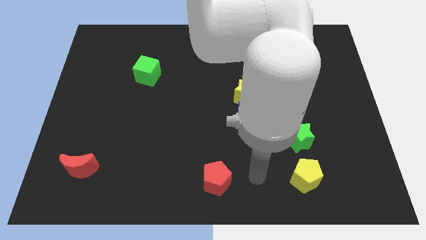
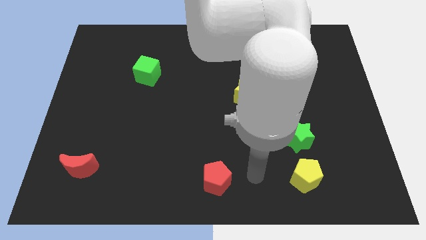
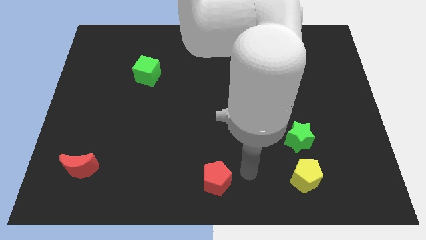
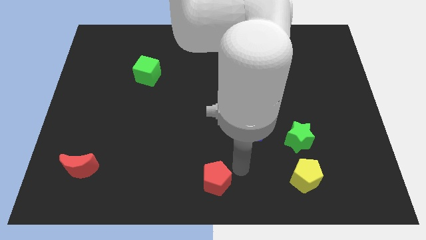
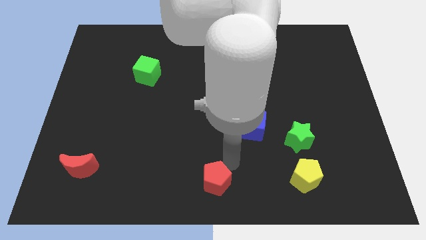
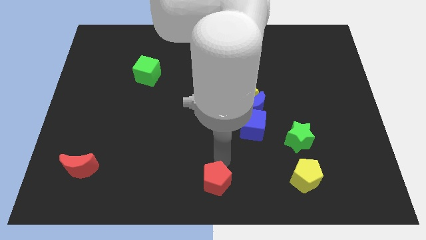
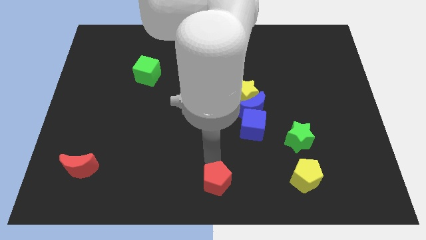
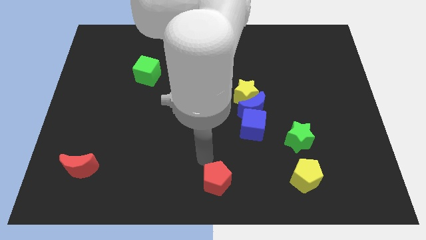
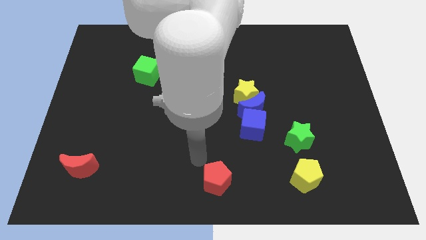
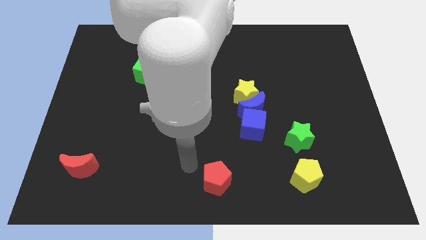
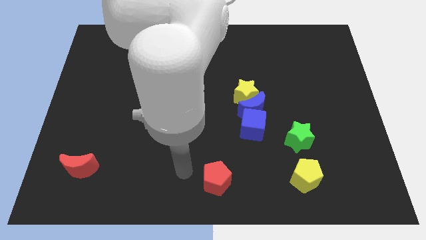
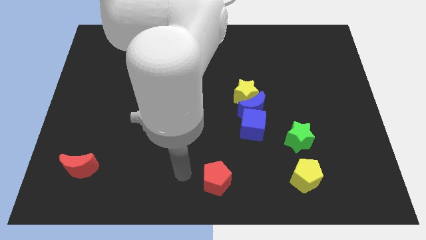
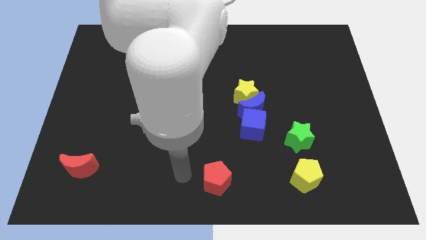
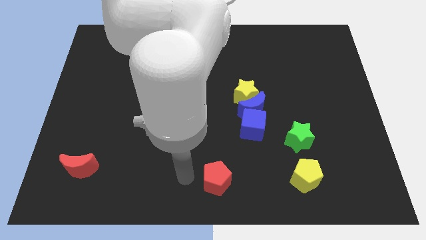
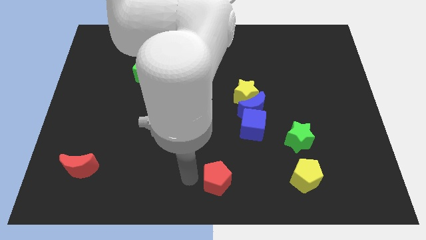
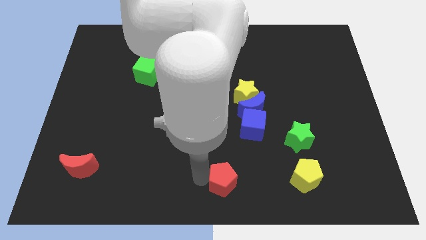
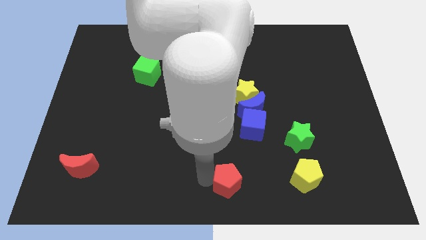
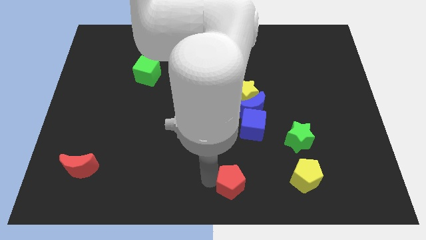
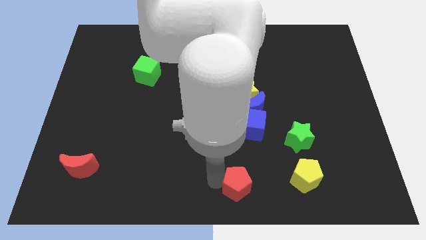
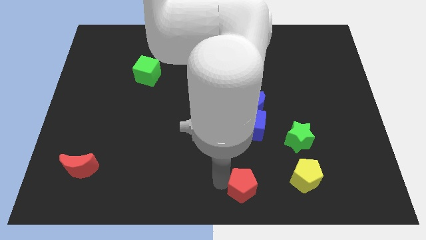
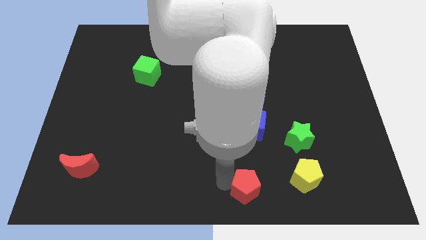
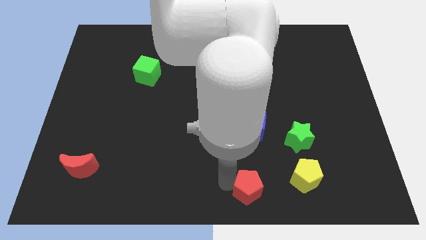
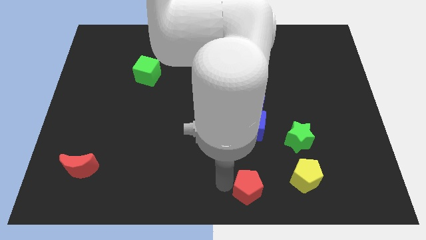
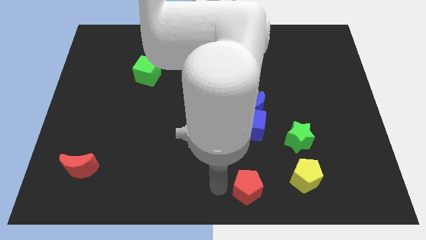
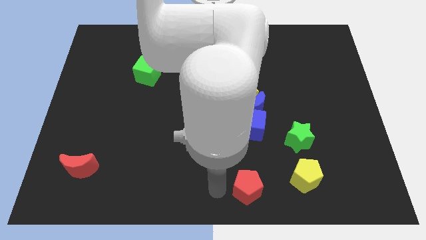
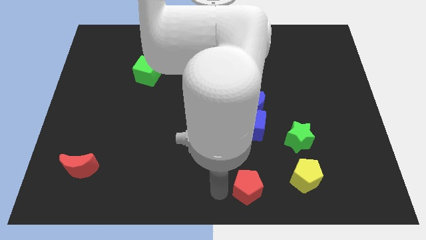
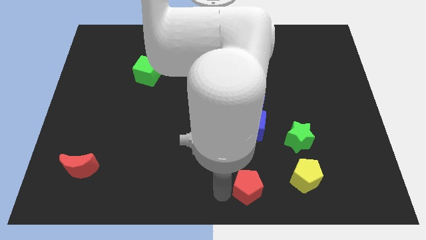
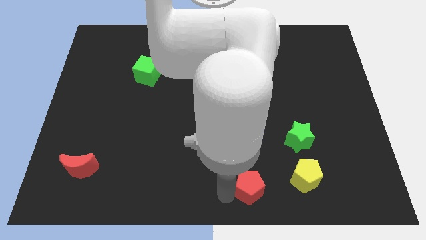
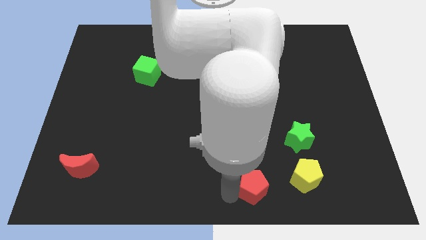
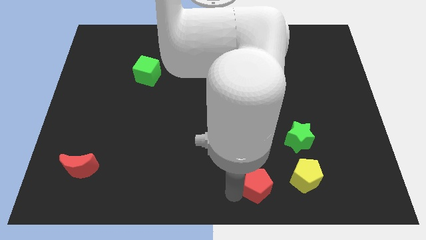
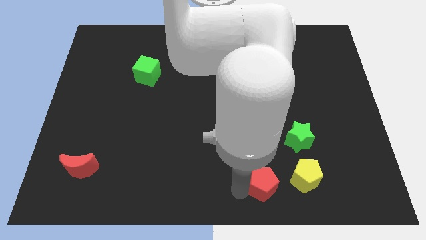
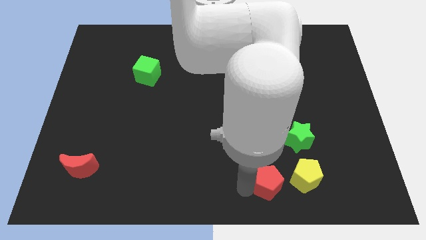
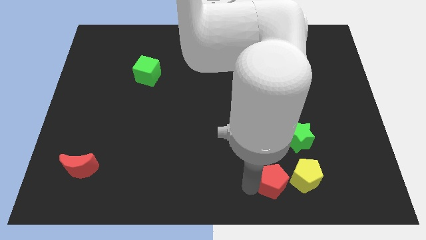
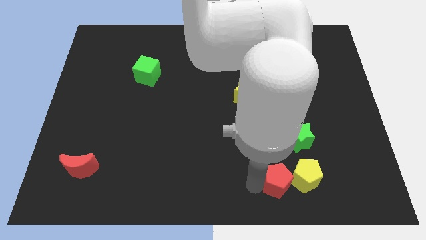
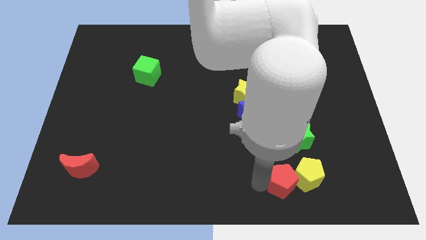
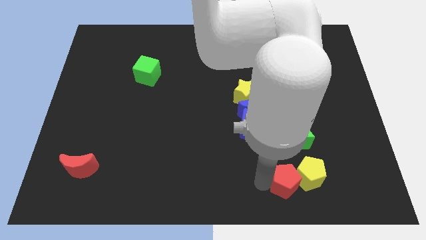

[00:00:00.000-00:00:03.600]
move the red pentagon to the yellow pentagon

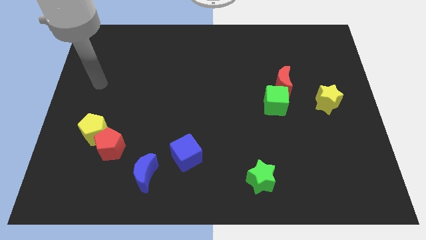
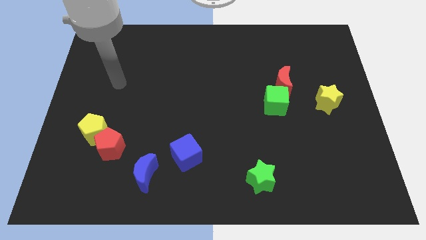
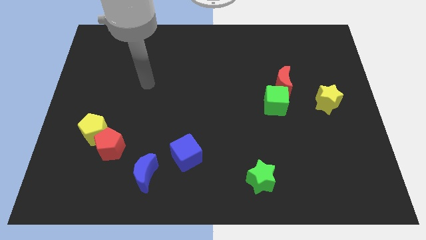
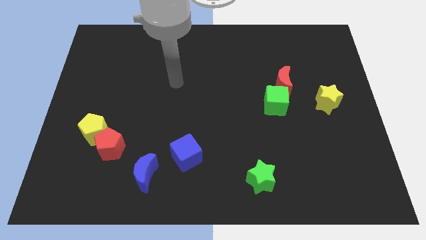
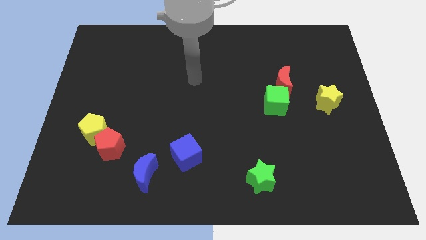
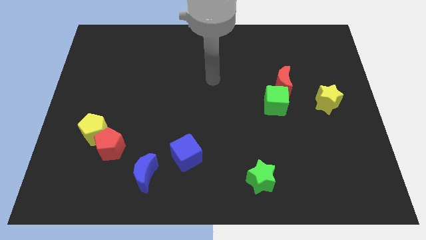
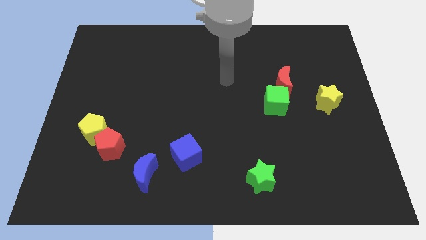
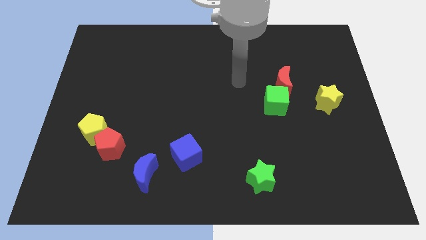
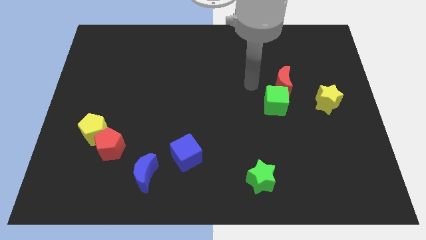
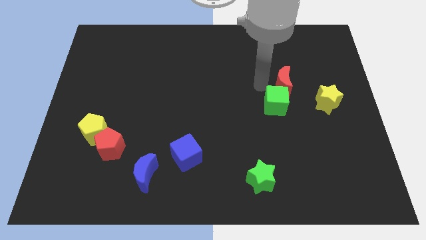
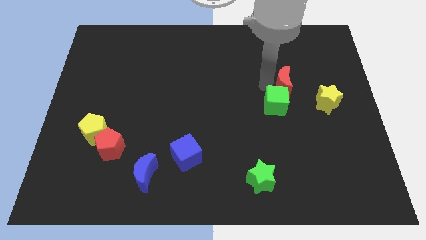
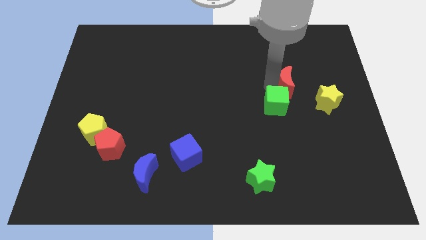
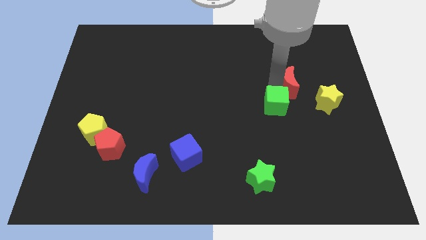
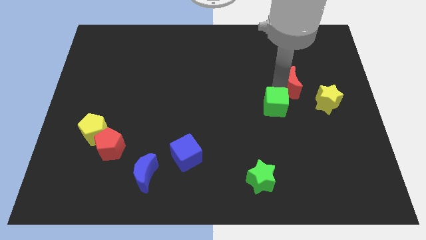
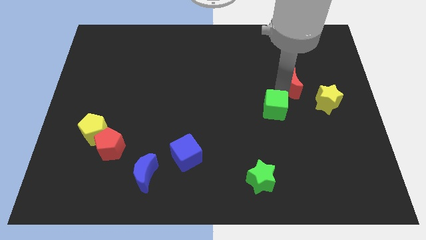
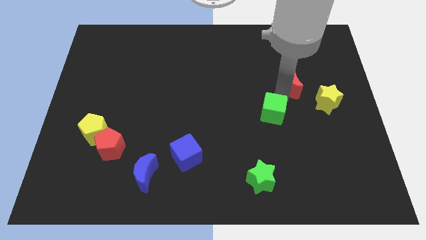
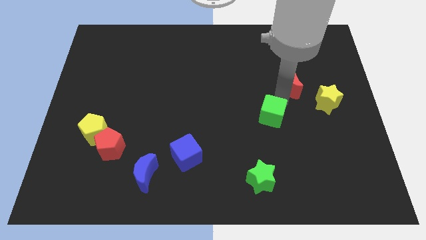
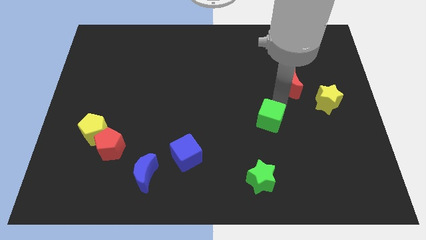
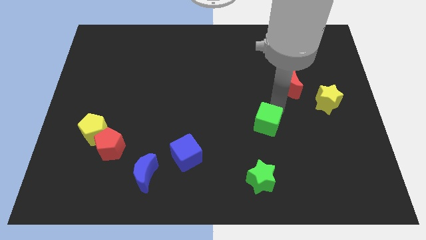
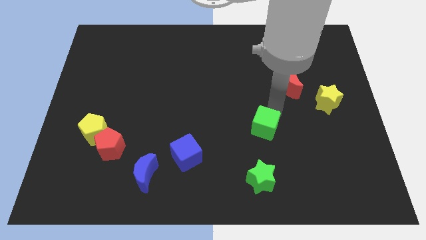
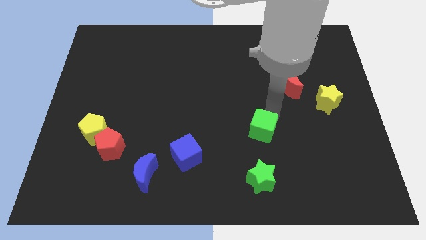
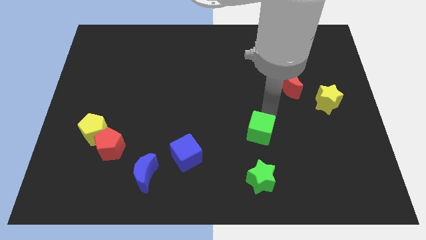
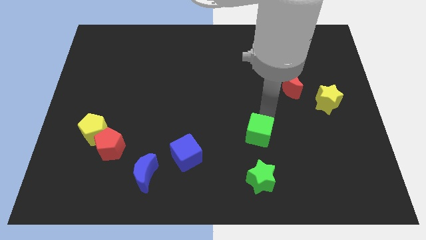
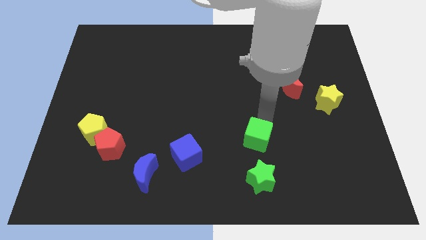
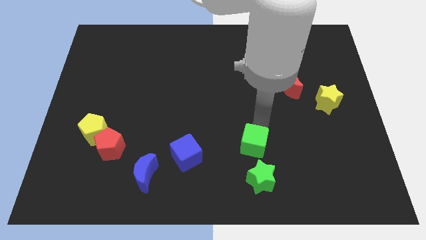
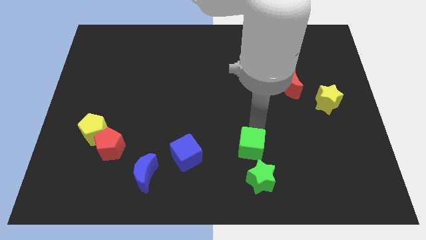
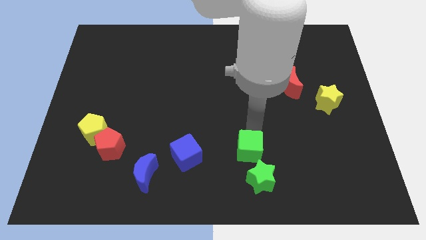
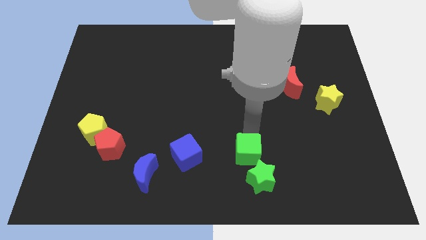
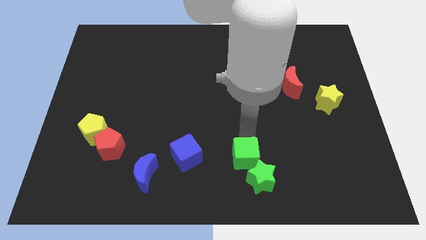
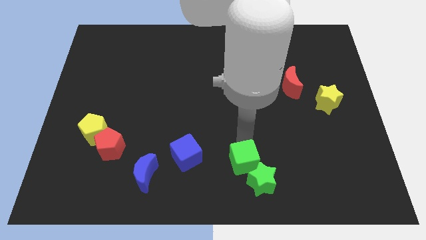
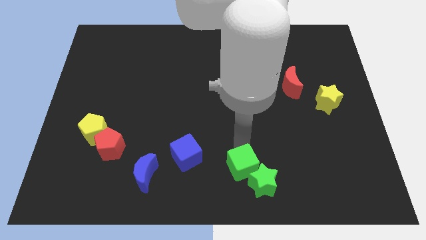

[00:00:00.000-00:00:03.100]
put the green cube towards the green star

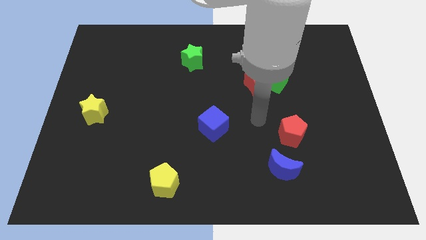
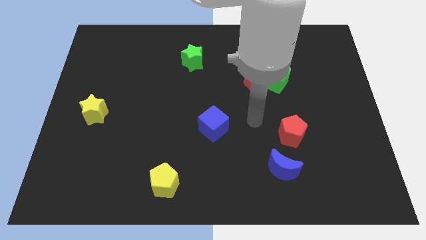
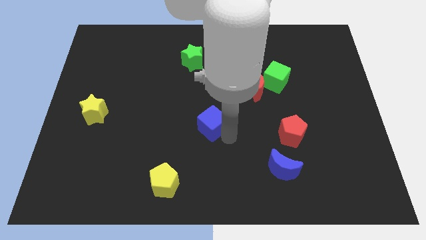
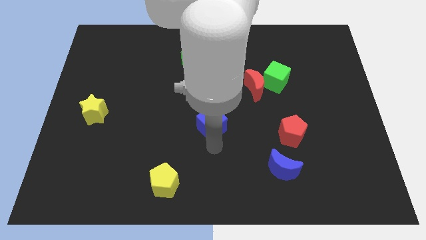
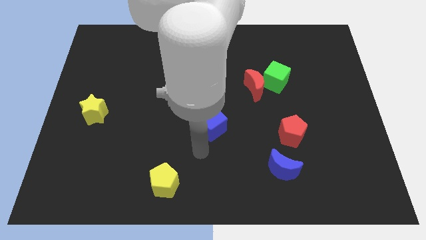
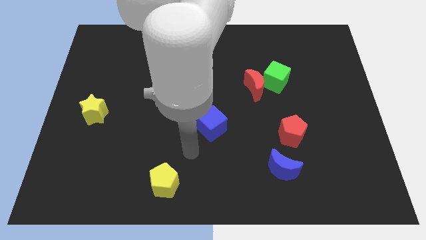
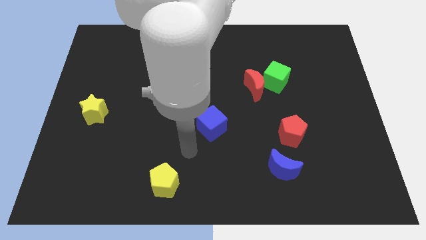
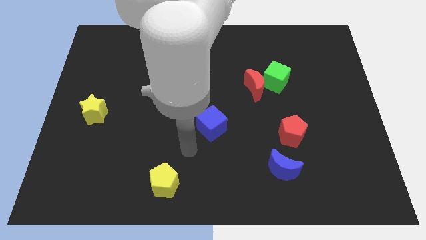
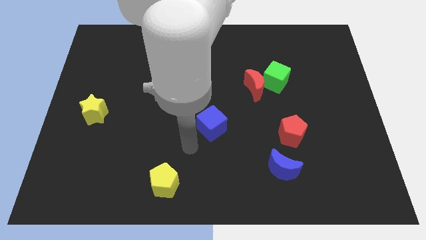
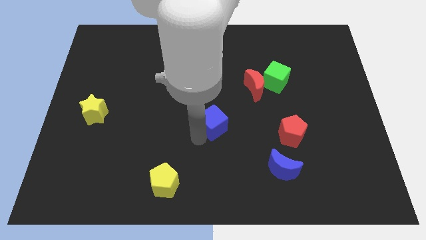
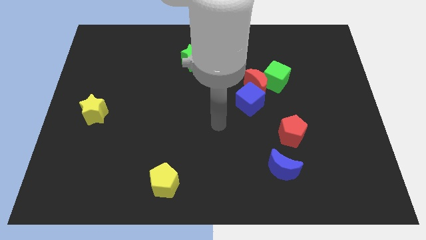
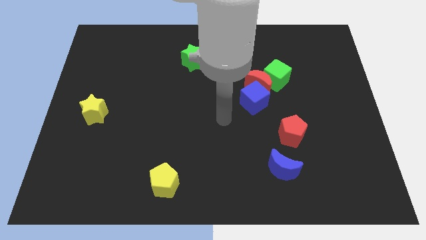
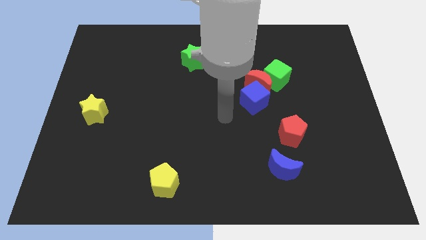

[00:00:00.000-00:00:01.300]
move the blue cube towards the red moon
